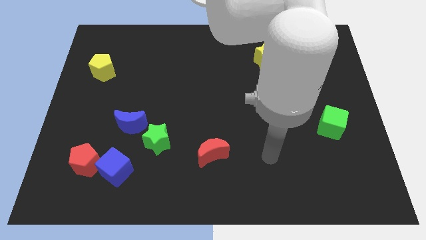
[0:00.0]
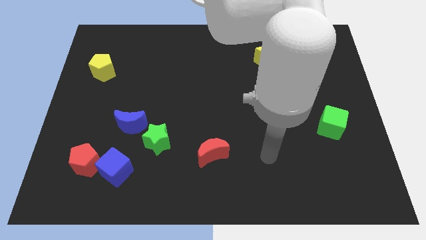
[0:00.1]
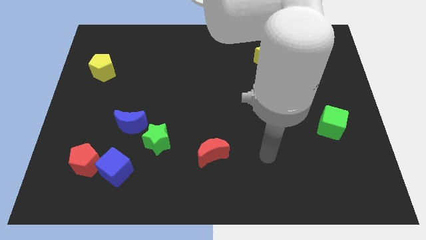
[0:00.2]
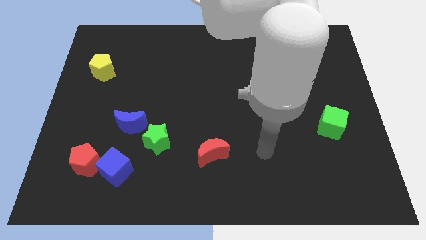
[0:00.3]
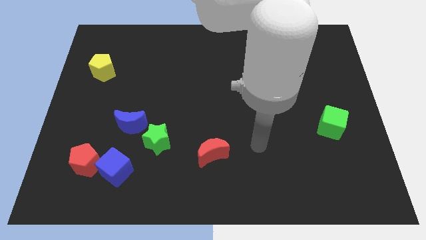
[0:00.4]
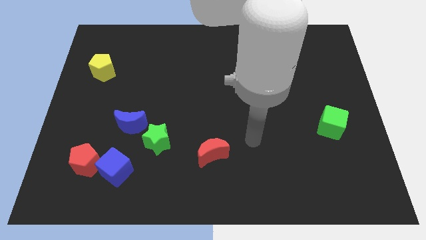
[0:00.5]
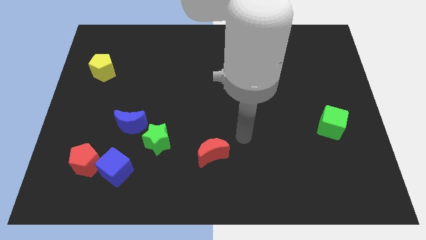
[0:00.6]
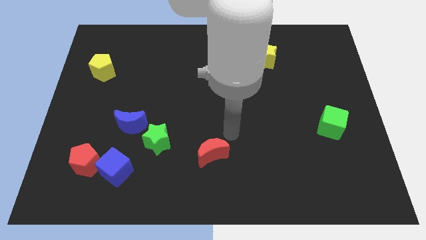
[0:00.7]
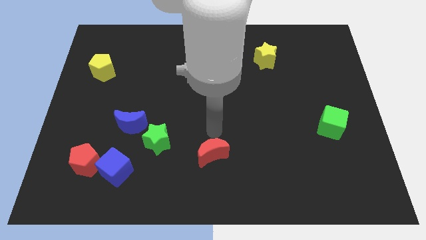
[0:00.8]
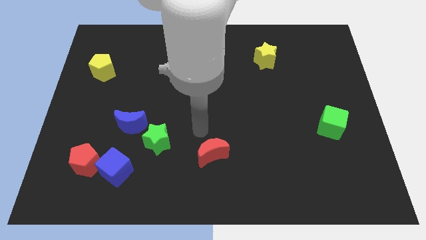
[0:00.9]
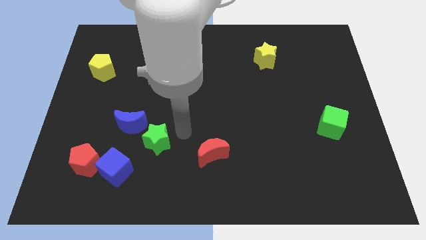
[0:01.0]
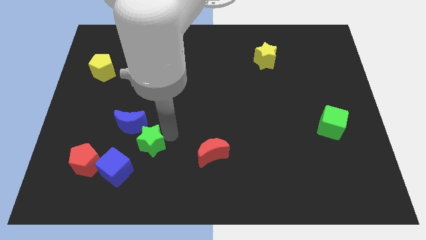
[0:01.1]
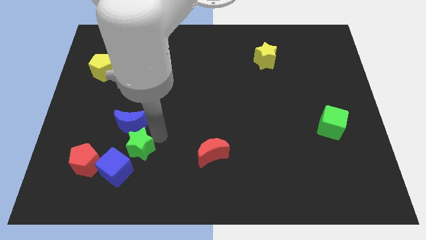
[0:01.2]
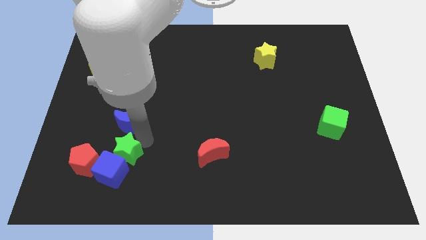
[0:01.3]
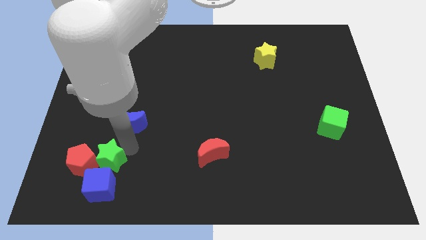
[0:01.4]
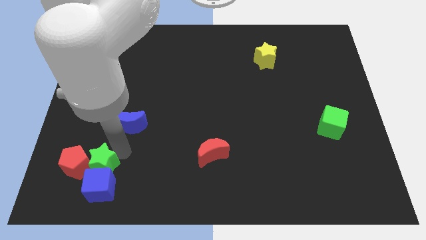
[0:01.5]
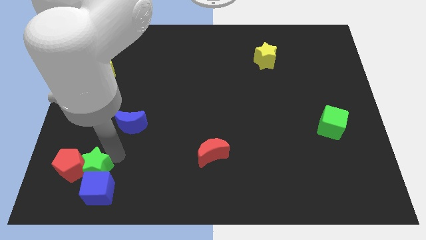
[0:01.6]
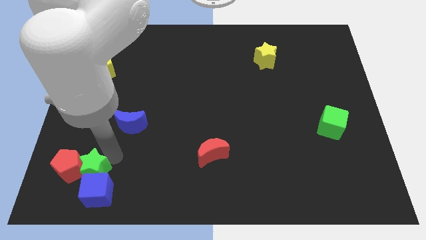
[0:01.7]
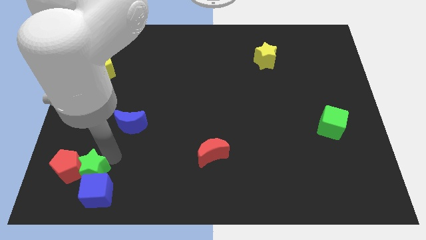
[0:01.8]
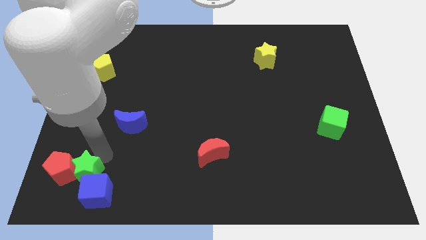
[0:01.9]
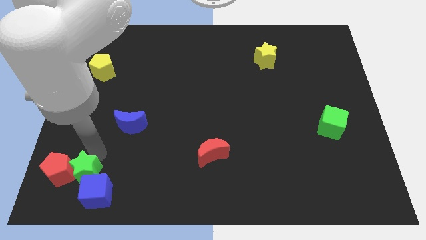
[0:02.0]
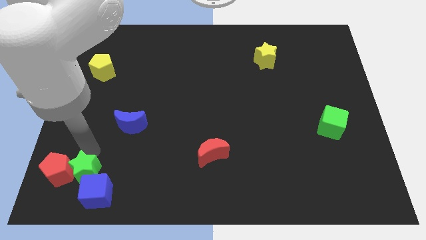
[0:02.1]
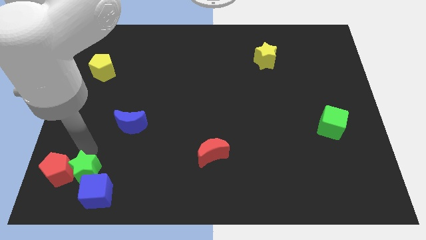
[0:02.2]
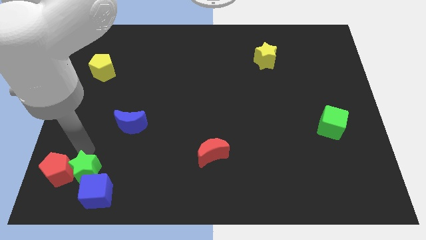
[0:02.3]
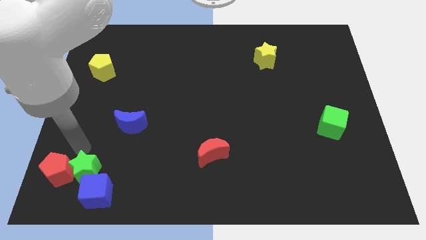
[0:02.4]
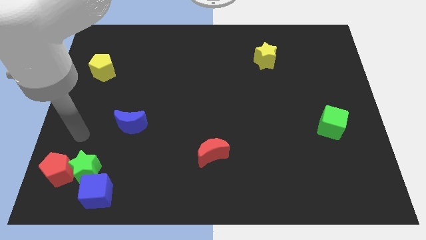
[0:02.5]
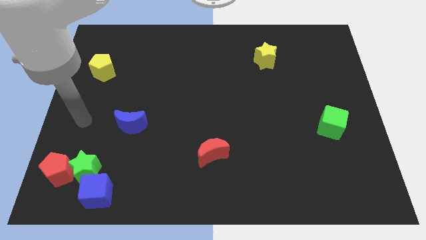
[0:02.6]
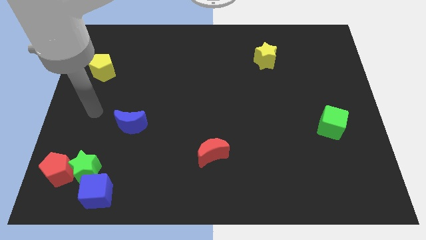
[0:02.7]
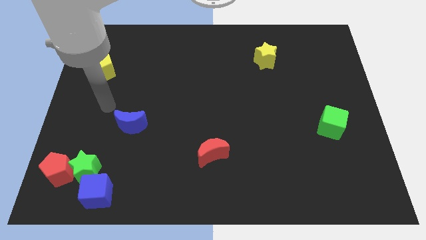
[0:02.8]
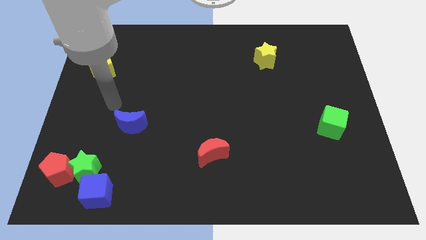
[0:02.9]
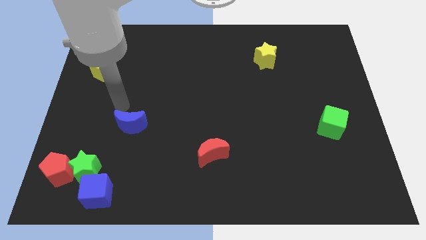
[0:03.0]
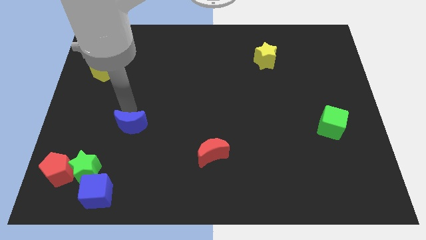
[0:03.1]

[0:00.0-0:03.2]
place the arm above the blue moon

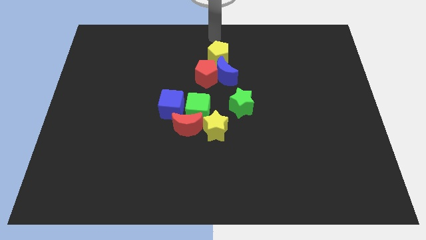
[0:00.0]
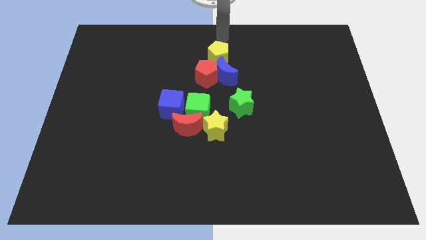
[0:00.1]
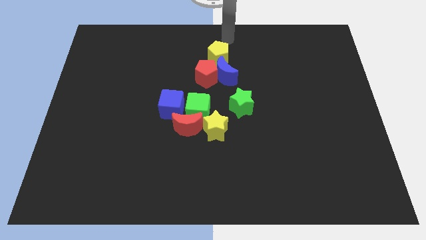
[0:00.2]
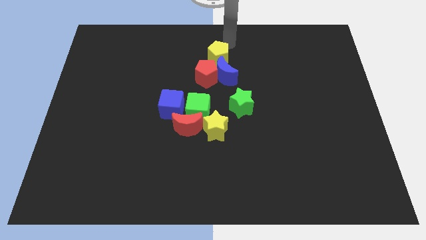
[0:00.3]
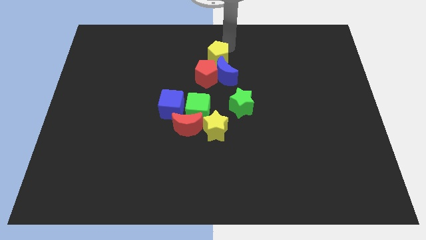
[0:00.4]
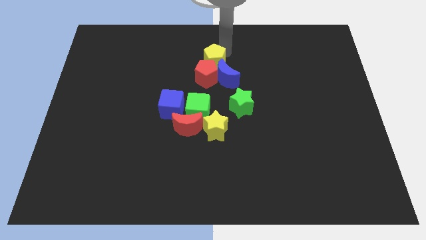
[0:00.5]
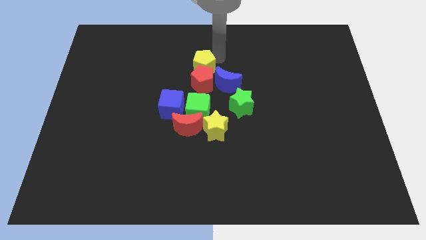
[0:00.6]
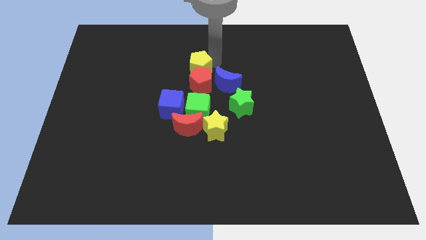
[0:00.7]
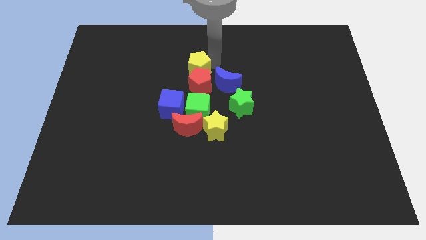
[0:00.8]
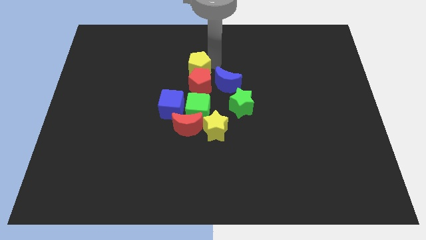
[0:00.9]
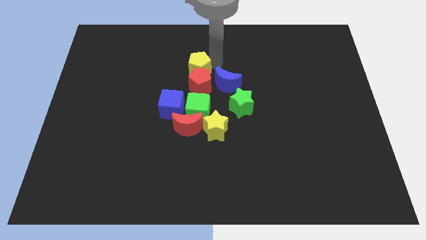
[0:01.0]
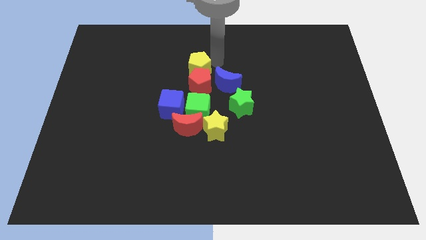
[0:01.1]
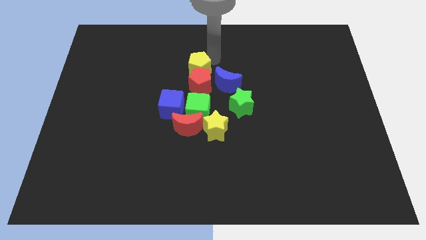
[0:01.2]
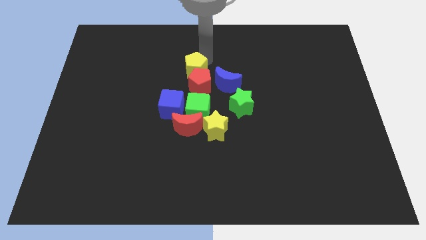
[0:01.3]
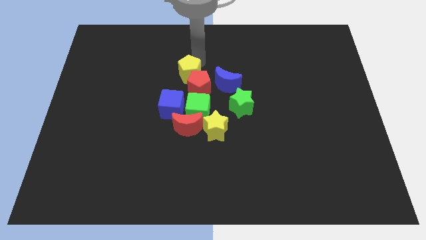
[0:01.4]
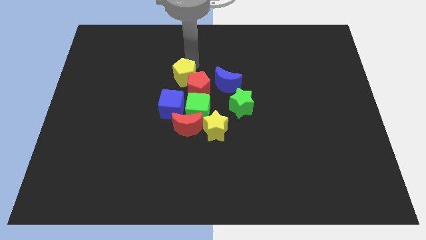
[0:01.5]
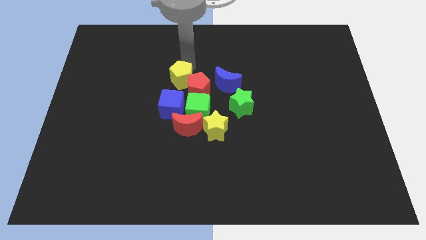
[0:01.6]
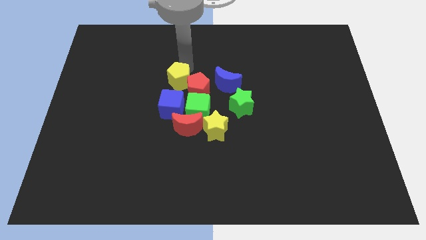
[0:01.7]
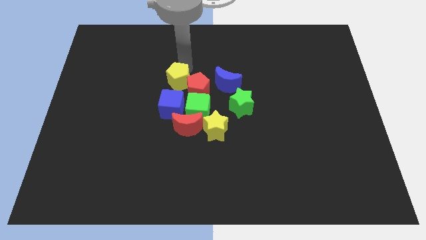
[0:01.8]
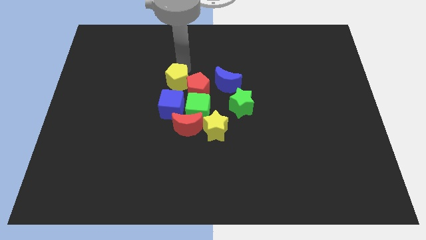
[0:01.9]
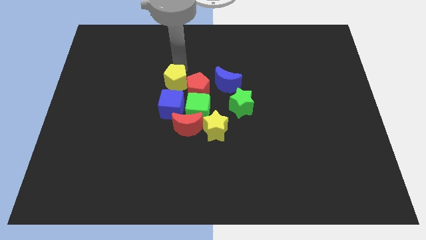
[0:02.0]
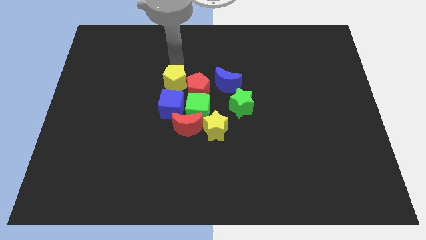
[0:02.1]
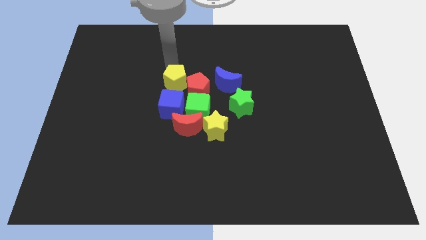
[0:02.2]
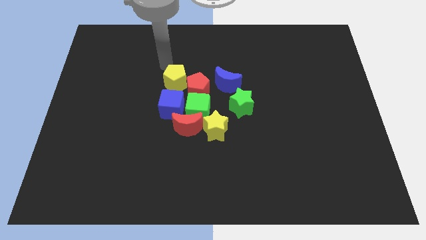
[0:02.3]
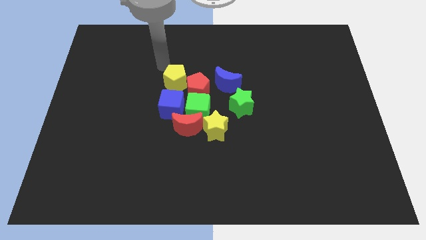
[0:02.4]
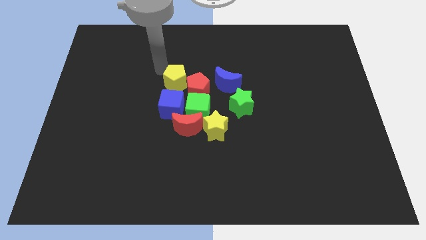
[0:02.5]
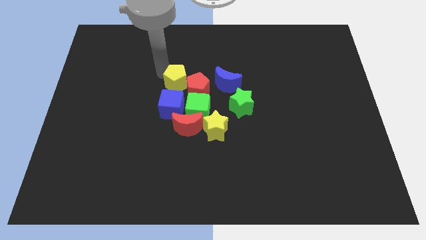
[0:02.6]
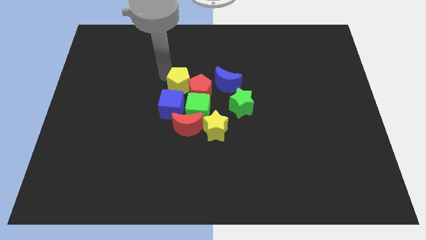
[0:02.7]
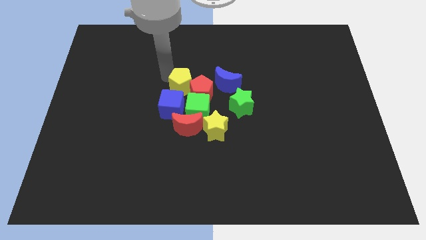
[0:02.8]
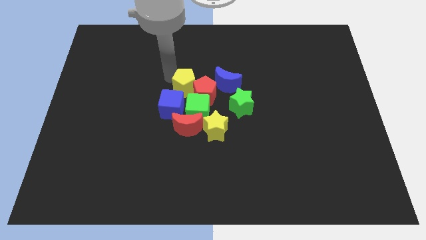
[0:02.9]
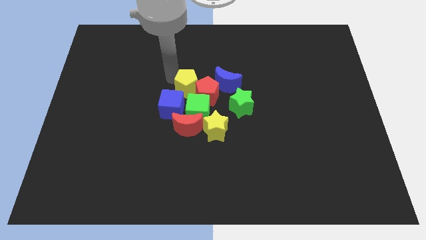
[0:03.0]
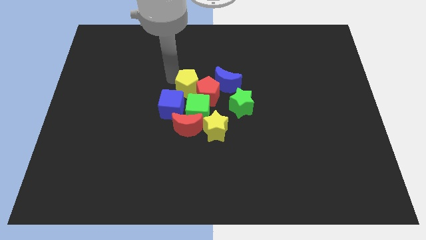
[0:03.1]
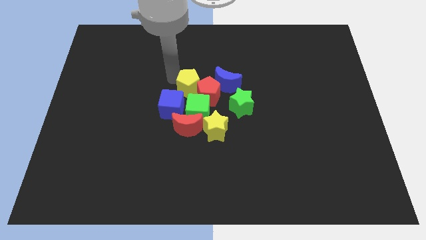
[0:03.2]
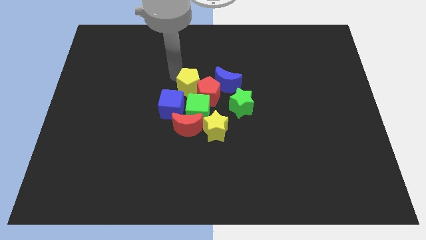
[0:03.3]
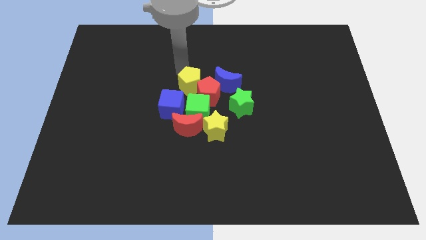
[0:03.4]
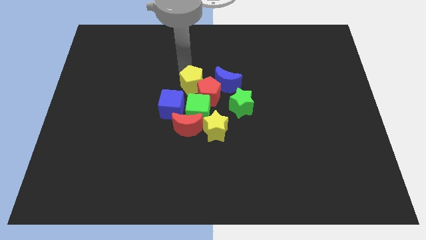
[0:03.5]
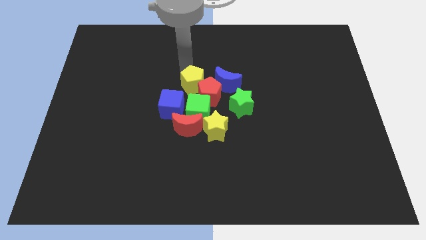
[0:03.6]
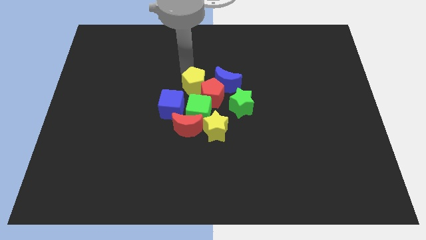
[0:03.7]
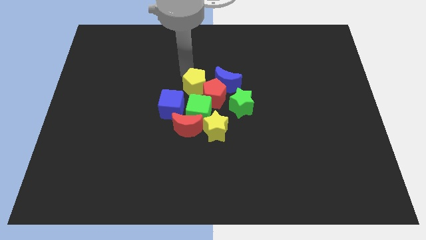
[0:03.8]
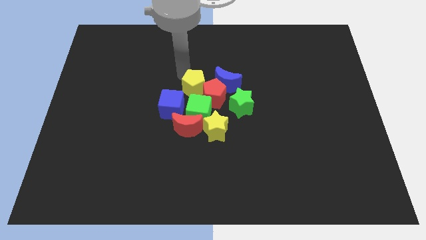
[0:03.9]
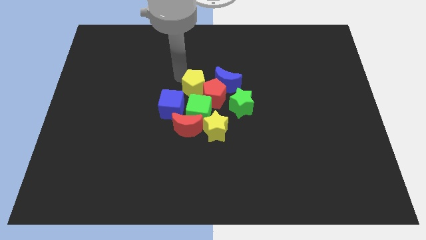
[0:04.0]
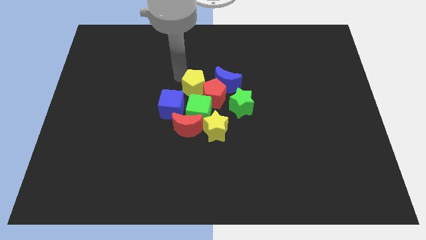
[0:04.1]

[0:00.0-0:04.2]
move yellow pentagon and red pentagon on top of green cube

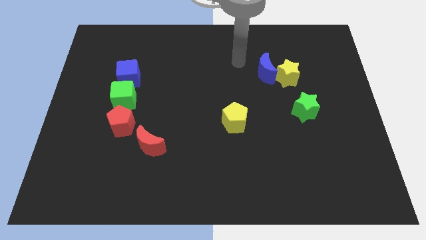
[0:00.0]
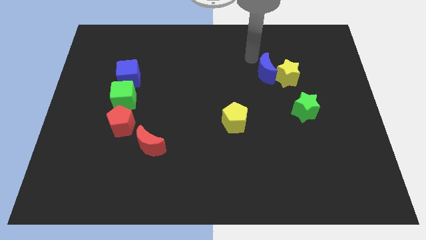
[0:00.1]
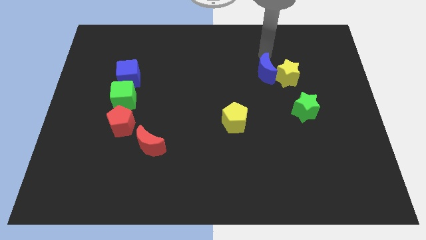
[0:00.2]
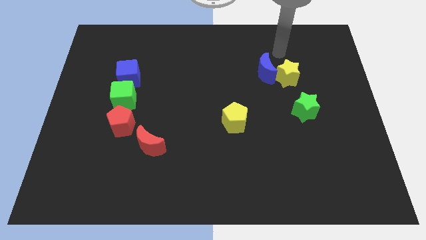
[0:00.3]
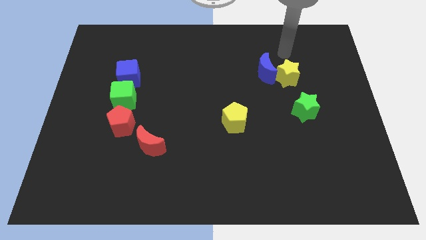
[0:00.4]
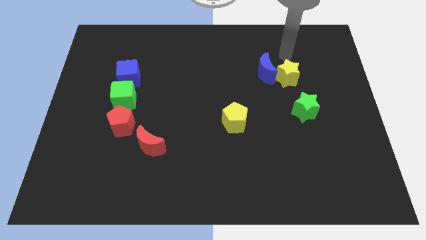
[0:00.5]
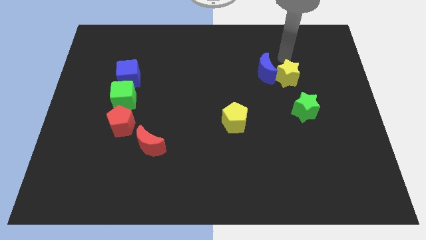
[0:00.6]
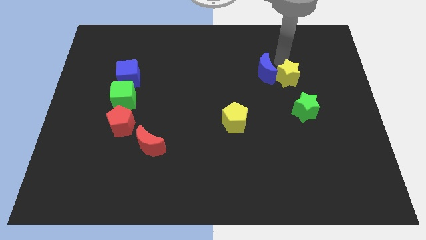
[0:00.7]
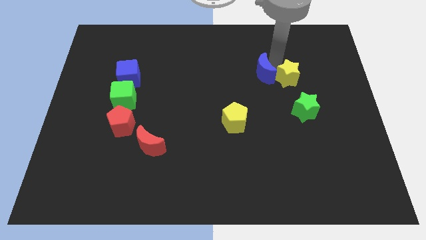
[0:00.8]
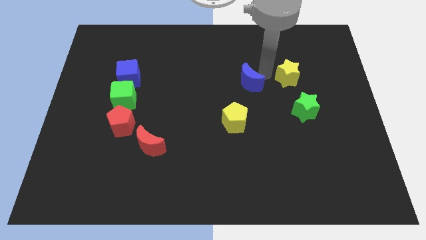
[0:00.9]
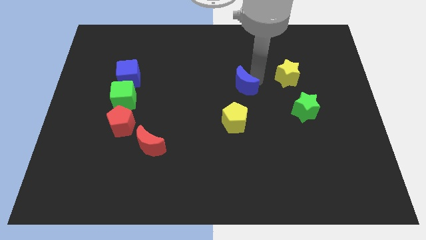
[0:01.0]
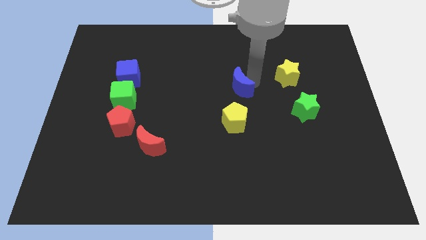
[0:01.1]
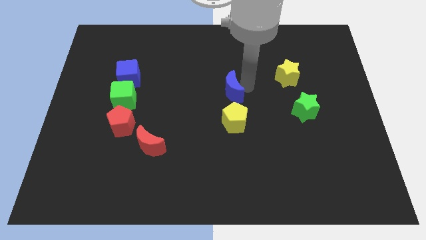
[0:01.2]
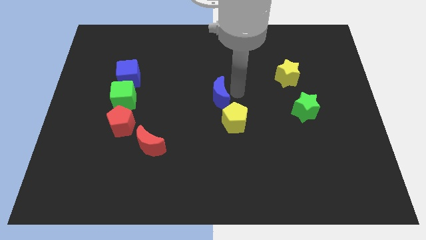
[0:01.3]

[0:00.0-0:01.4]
place blue moon to the top of yellow pentagon

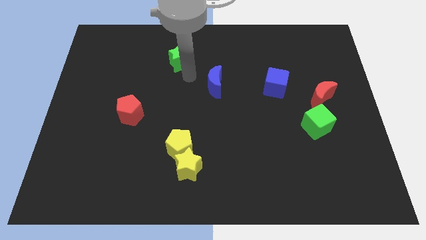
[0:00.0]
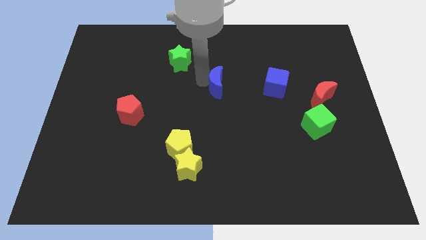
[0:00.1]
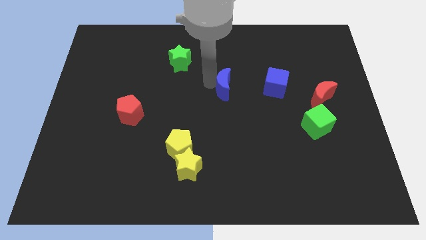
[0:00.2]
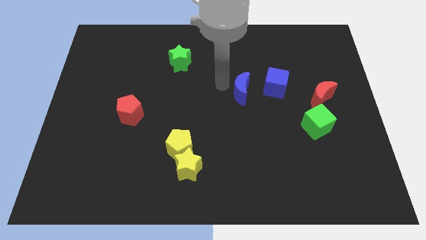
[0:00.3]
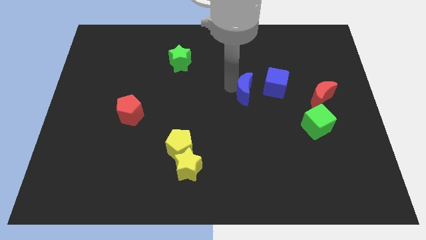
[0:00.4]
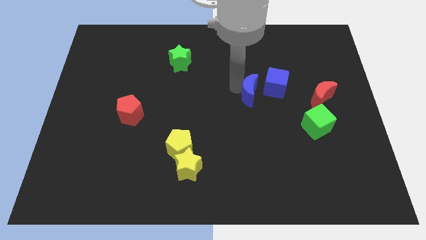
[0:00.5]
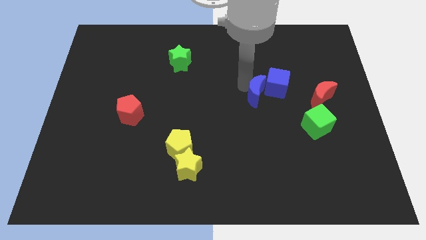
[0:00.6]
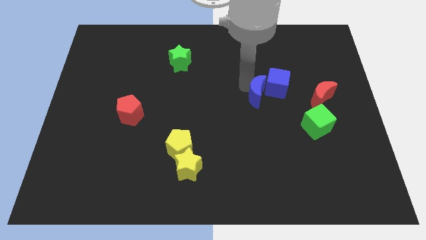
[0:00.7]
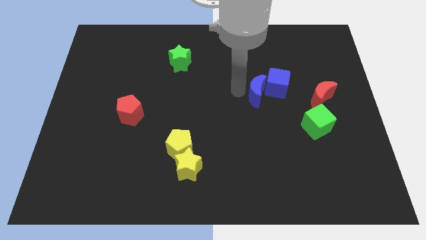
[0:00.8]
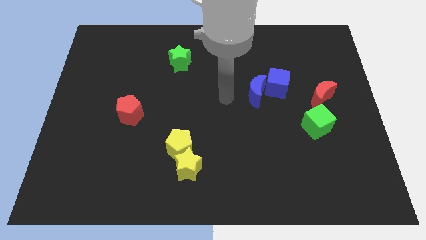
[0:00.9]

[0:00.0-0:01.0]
move blue moon into the blue cube
